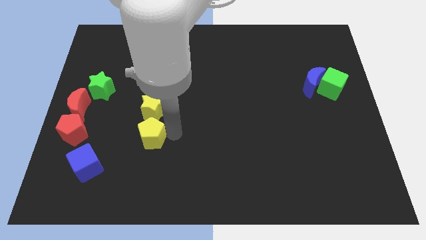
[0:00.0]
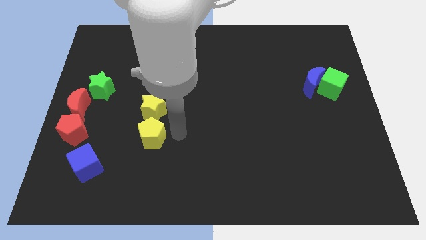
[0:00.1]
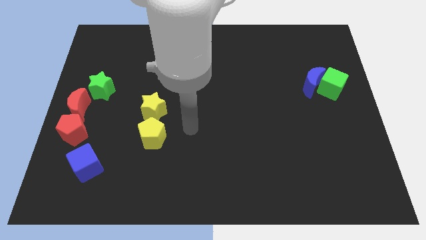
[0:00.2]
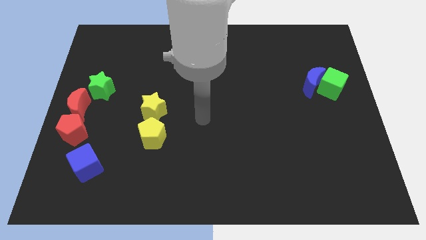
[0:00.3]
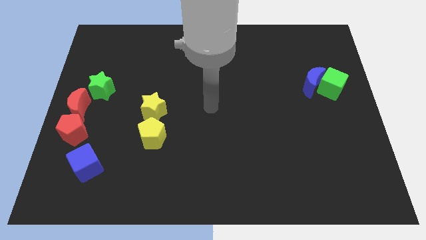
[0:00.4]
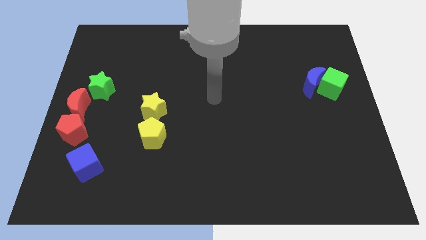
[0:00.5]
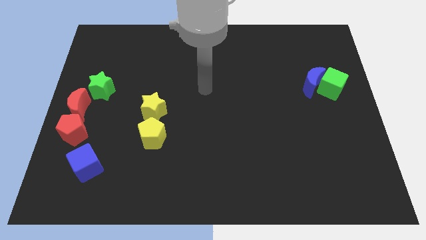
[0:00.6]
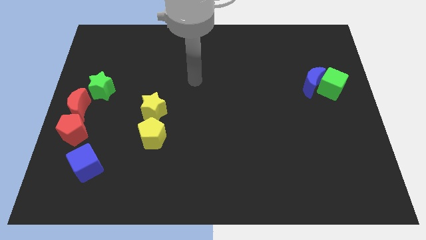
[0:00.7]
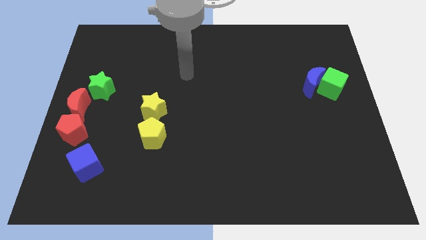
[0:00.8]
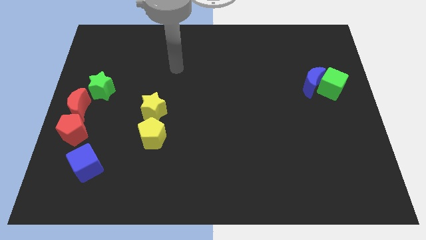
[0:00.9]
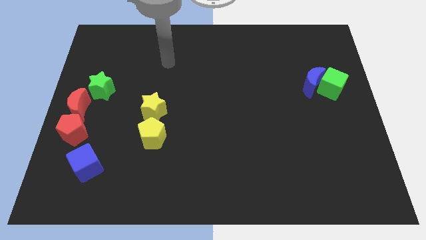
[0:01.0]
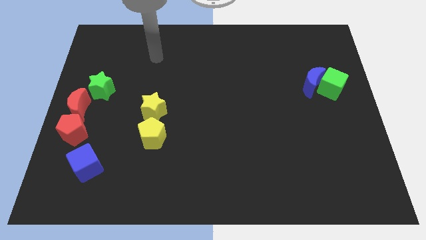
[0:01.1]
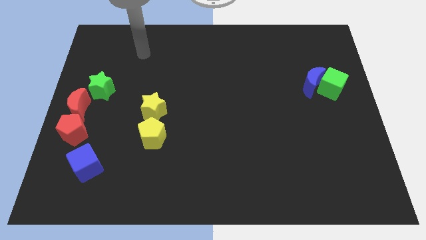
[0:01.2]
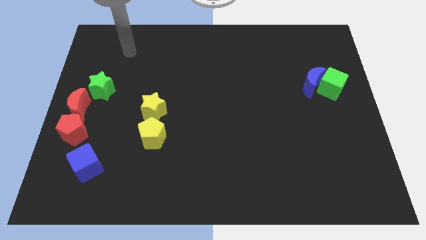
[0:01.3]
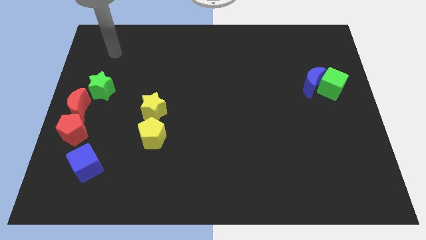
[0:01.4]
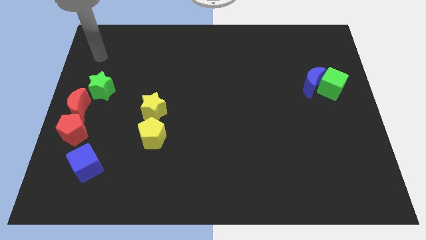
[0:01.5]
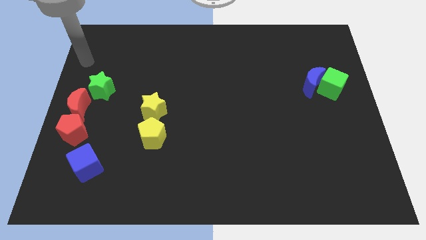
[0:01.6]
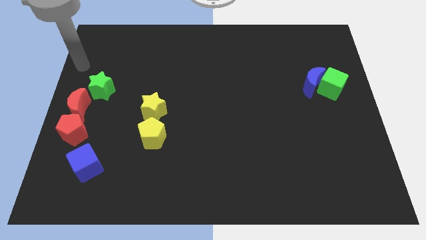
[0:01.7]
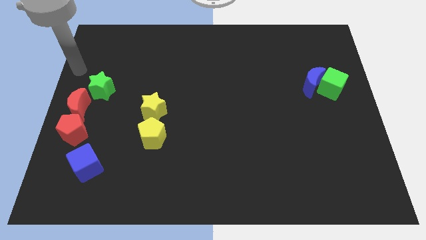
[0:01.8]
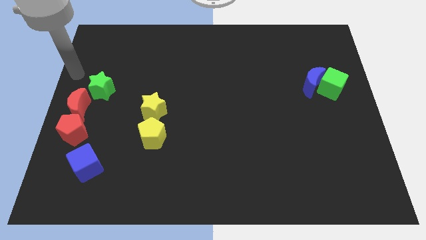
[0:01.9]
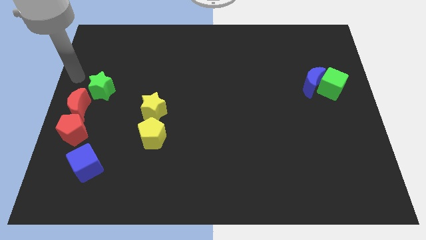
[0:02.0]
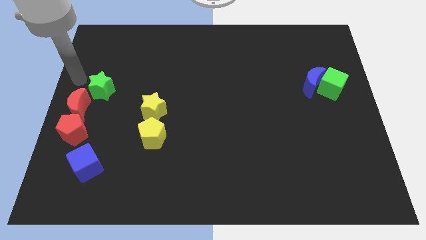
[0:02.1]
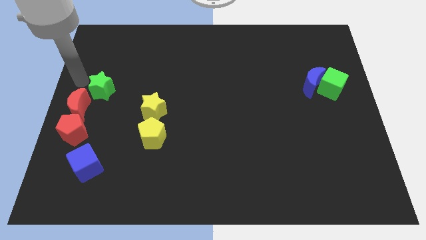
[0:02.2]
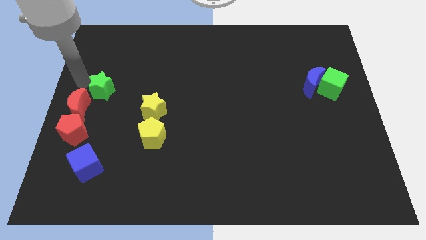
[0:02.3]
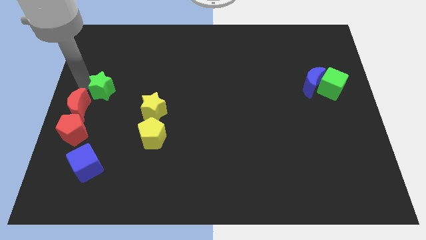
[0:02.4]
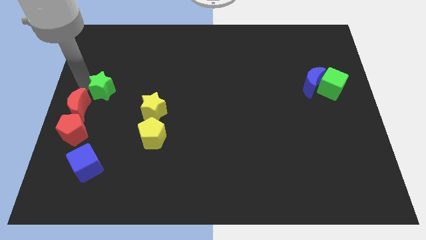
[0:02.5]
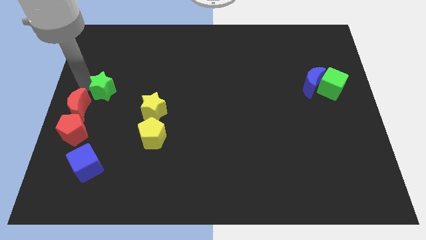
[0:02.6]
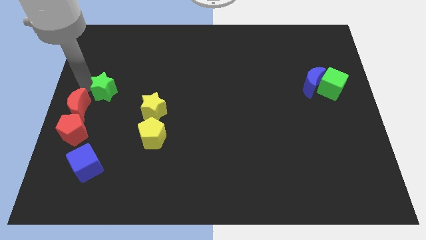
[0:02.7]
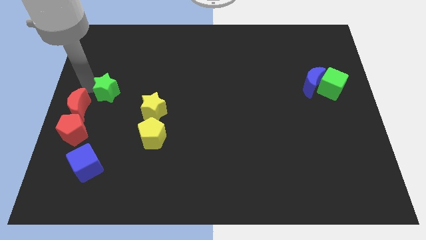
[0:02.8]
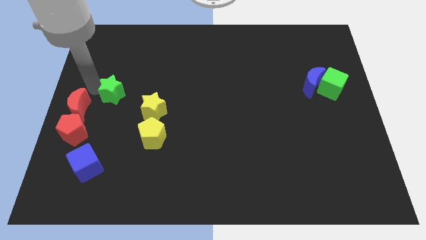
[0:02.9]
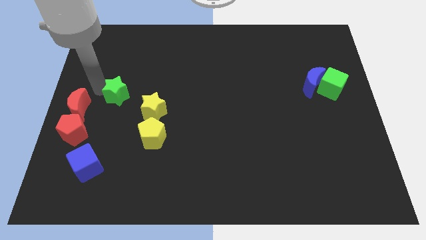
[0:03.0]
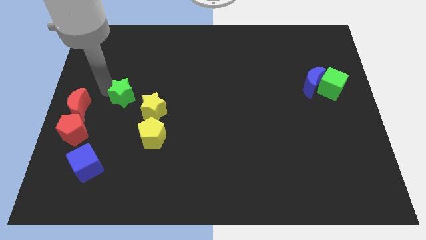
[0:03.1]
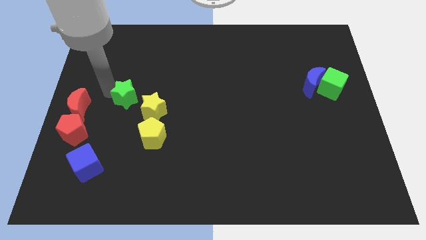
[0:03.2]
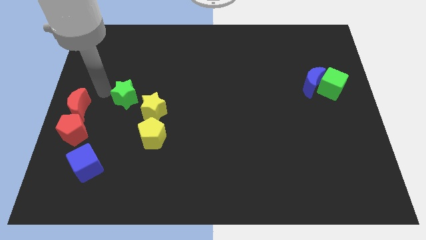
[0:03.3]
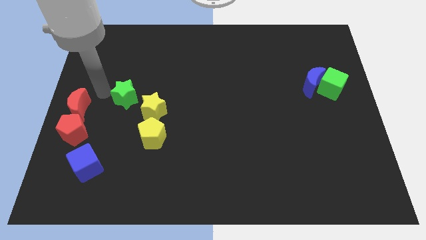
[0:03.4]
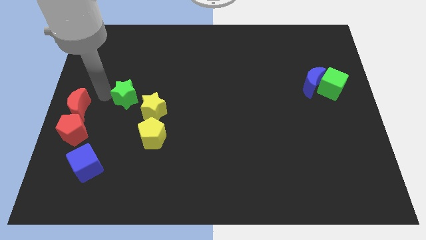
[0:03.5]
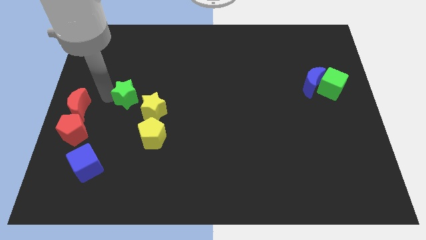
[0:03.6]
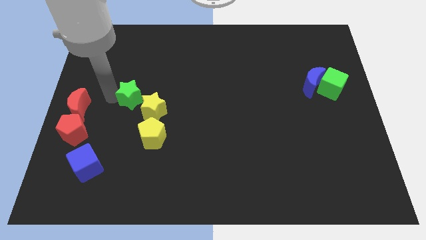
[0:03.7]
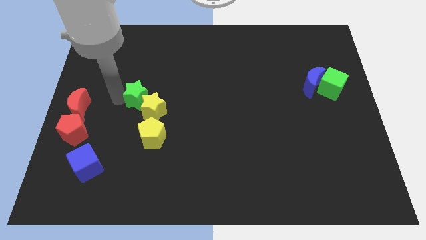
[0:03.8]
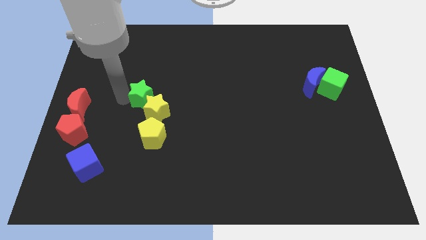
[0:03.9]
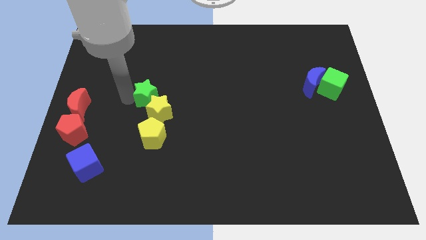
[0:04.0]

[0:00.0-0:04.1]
push the green star into the yellow star

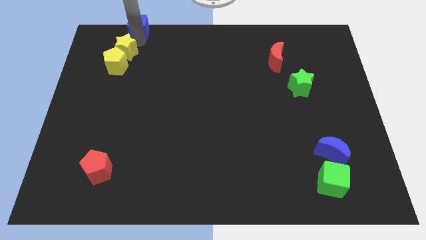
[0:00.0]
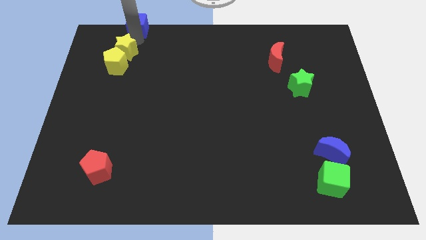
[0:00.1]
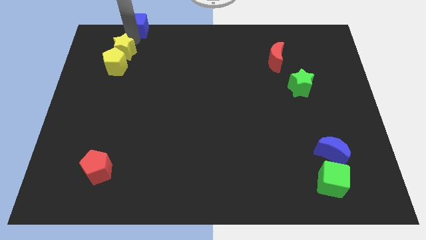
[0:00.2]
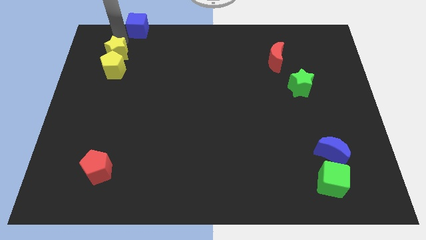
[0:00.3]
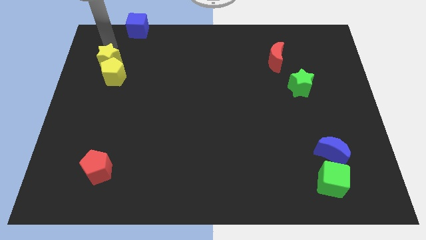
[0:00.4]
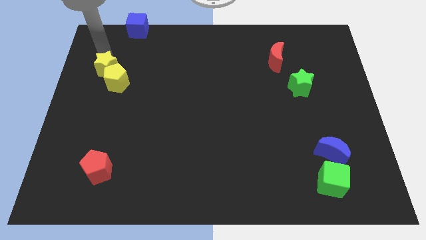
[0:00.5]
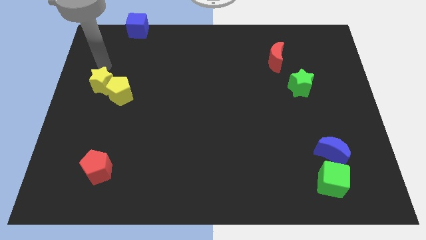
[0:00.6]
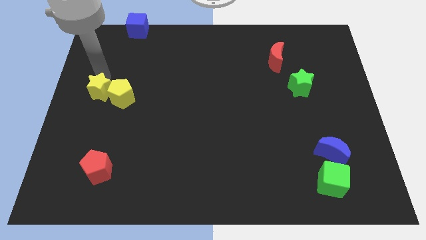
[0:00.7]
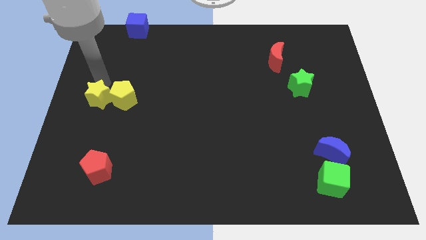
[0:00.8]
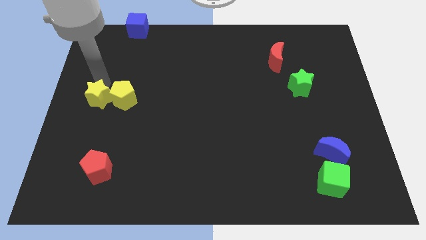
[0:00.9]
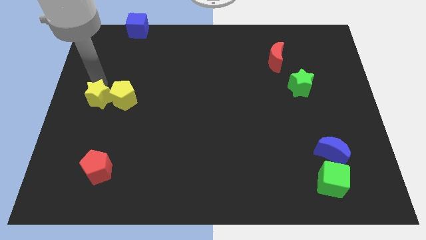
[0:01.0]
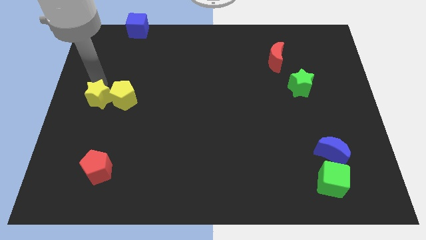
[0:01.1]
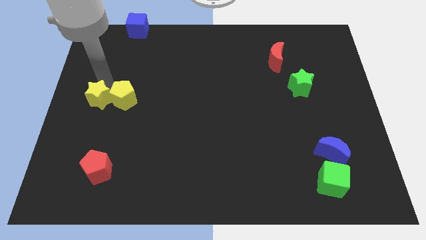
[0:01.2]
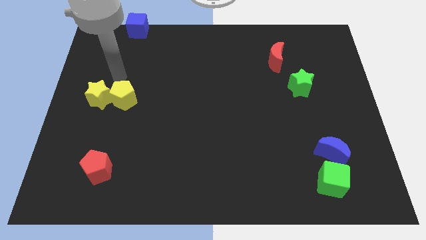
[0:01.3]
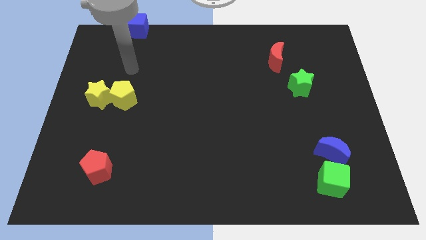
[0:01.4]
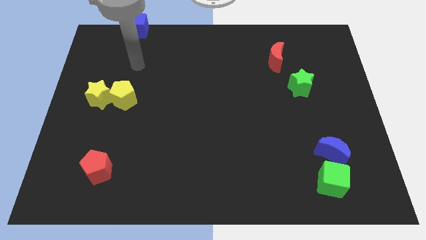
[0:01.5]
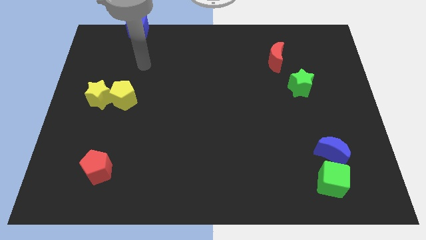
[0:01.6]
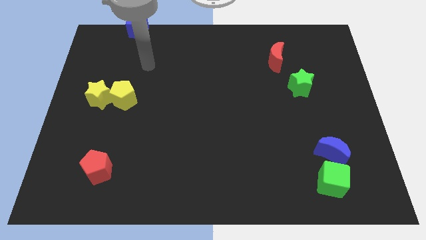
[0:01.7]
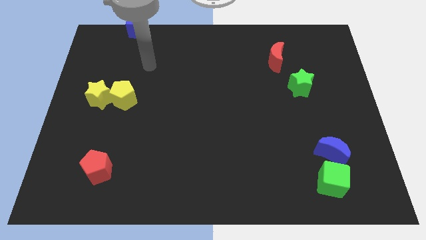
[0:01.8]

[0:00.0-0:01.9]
move the yellow star and yellow pentagon towards bottom

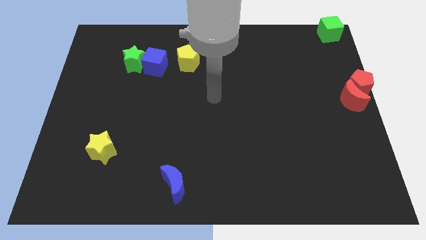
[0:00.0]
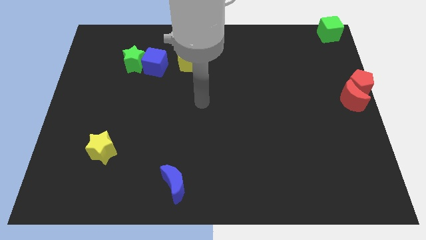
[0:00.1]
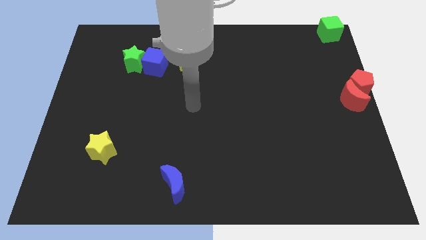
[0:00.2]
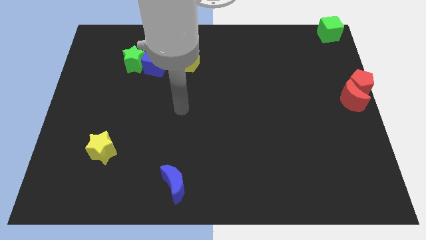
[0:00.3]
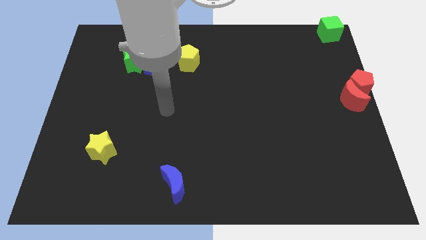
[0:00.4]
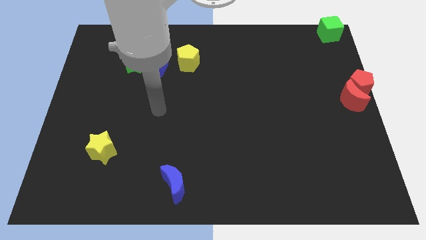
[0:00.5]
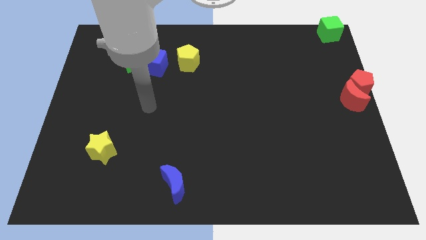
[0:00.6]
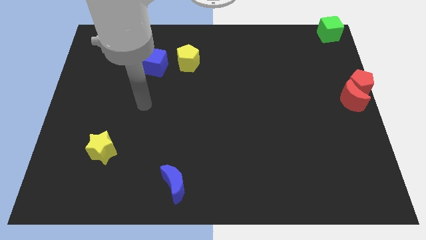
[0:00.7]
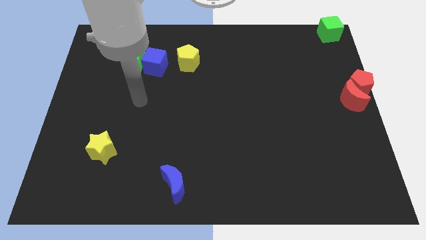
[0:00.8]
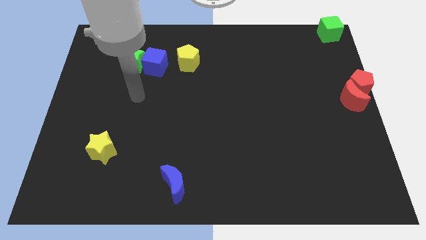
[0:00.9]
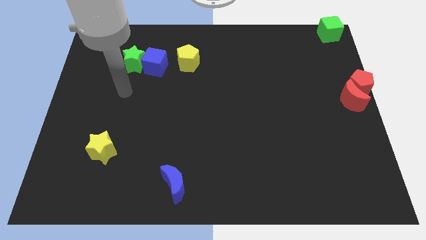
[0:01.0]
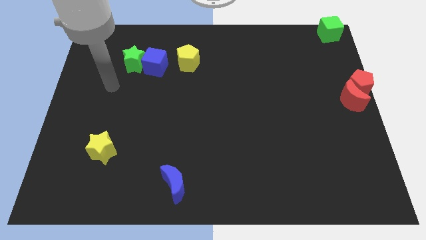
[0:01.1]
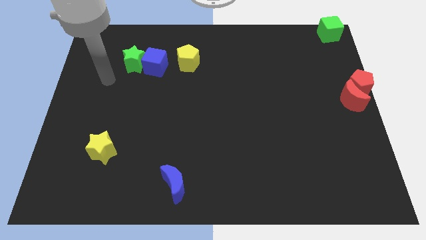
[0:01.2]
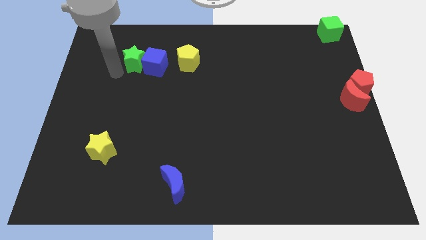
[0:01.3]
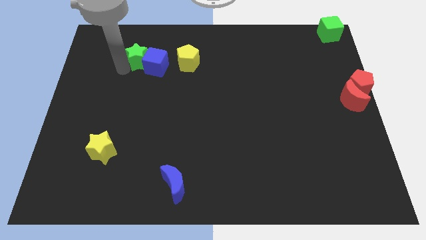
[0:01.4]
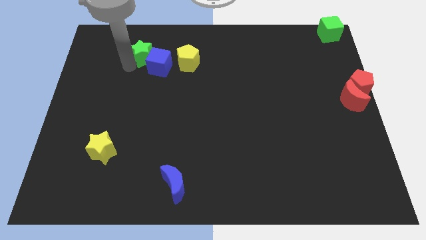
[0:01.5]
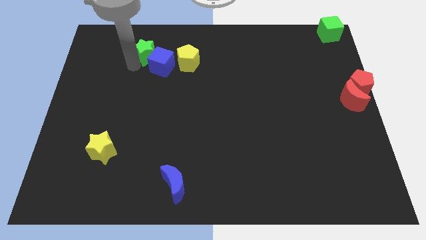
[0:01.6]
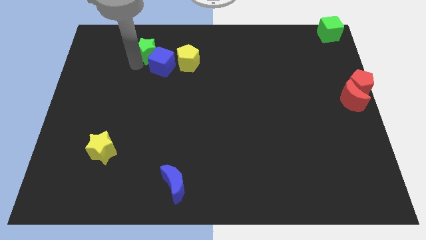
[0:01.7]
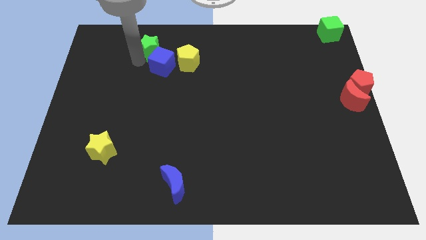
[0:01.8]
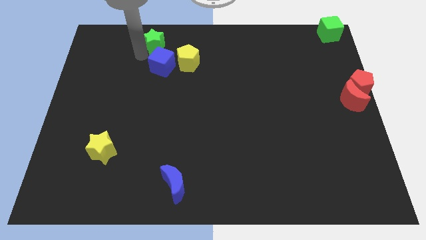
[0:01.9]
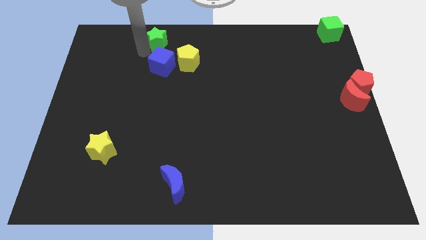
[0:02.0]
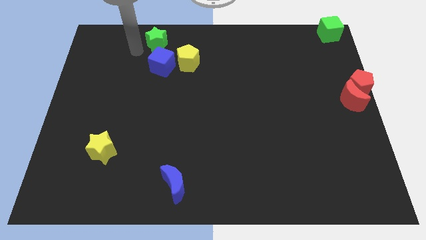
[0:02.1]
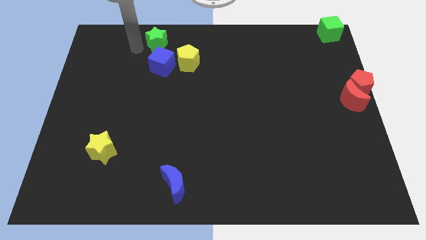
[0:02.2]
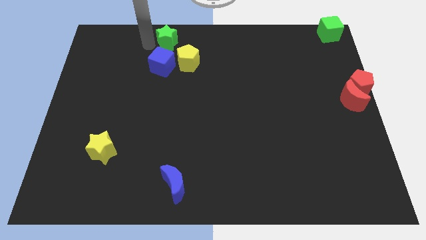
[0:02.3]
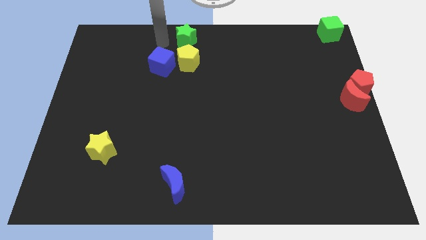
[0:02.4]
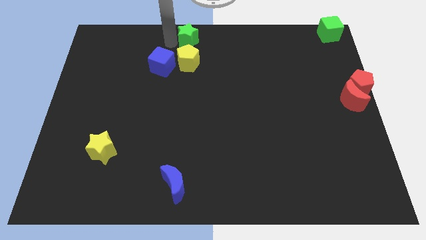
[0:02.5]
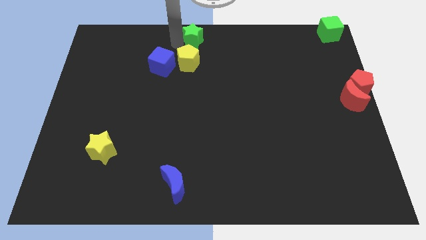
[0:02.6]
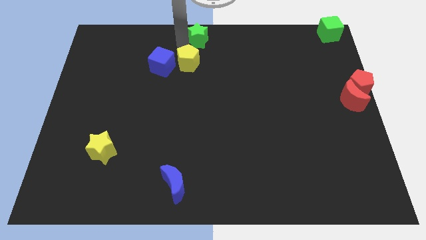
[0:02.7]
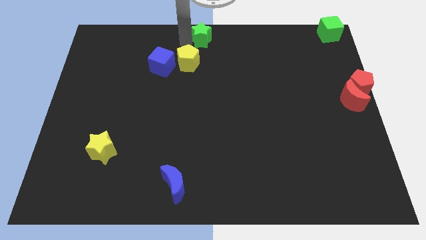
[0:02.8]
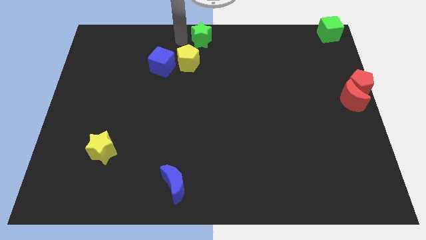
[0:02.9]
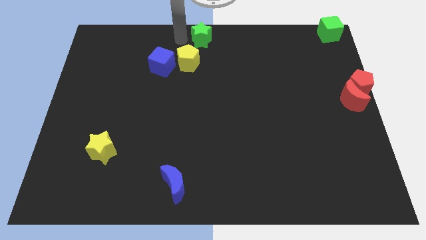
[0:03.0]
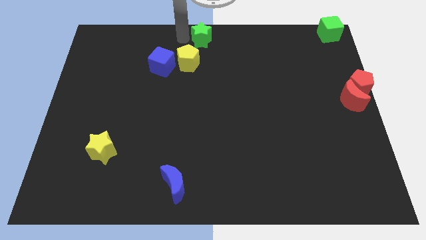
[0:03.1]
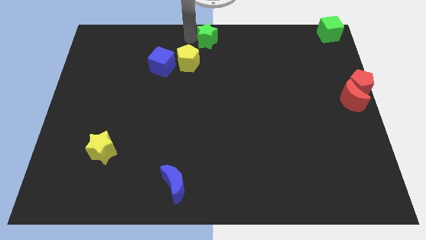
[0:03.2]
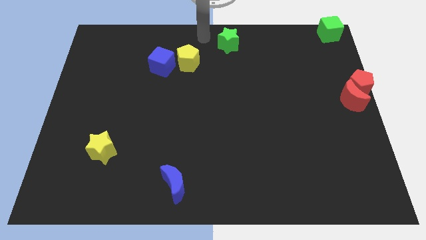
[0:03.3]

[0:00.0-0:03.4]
place the green star at the top center of the board
